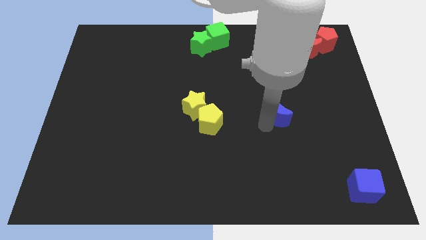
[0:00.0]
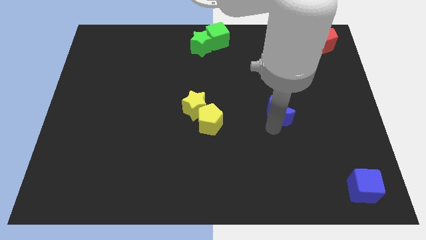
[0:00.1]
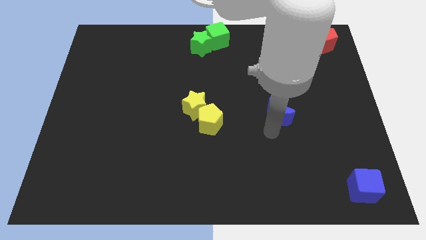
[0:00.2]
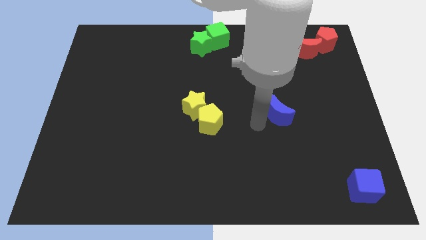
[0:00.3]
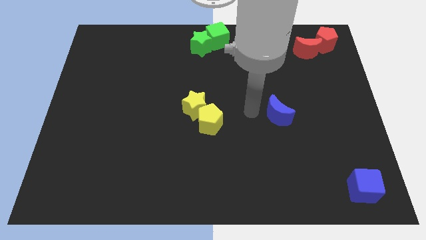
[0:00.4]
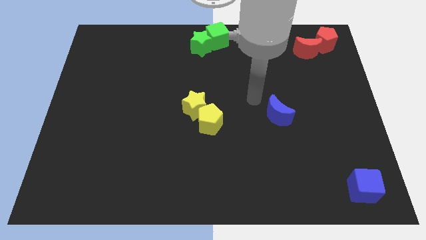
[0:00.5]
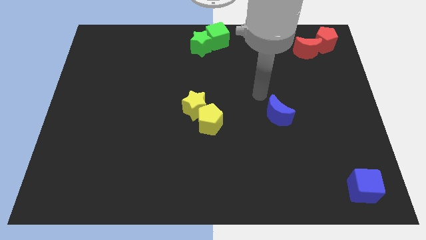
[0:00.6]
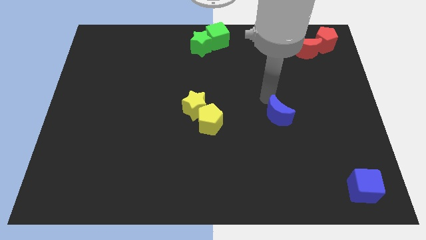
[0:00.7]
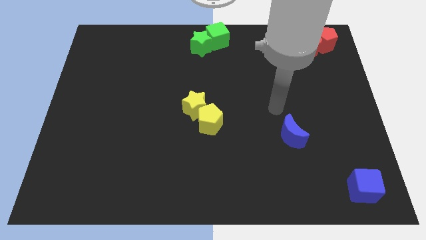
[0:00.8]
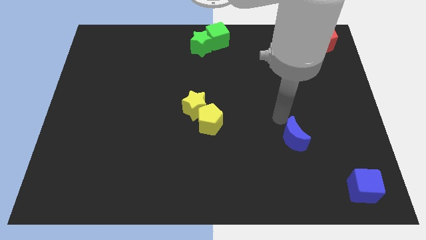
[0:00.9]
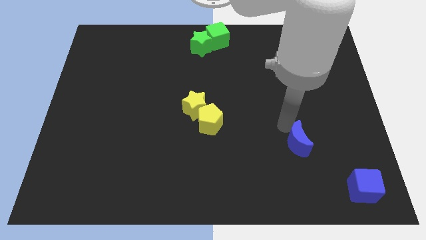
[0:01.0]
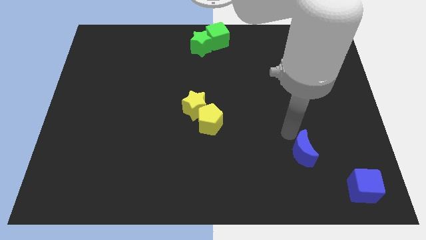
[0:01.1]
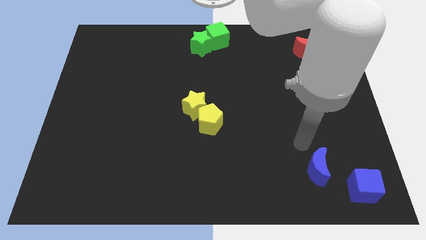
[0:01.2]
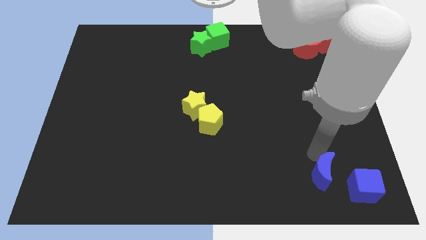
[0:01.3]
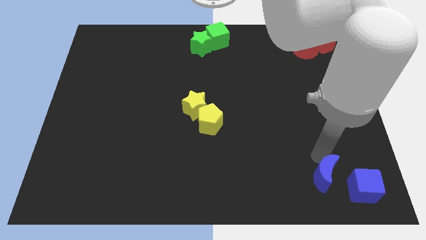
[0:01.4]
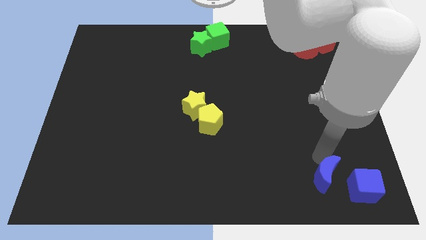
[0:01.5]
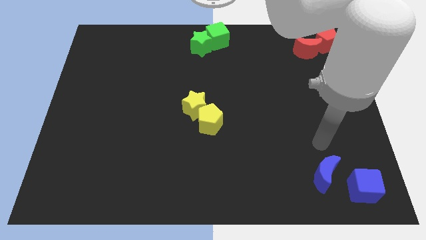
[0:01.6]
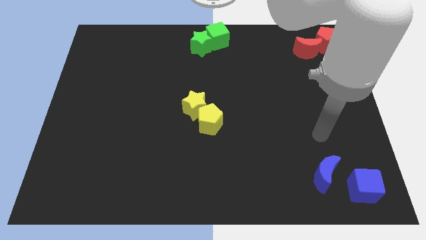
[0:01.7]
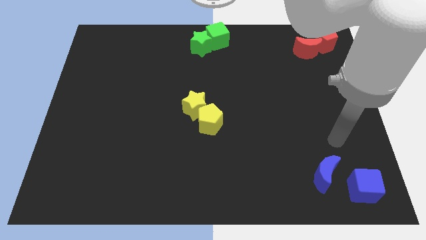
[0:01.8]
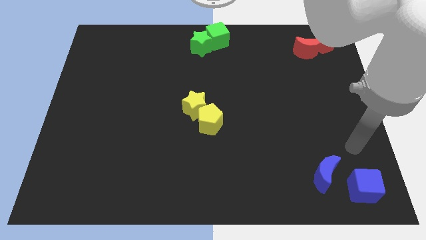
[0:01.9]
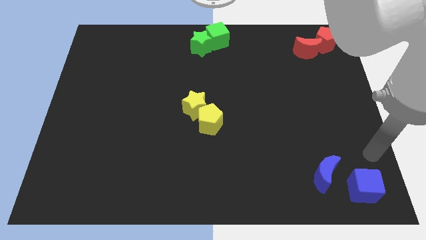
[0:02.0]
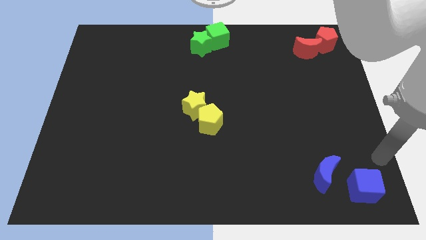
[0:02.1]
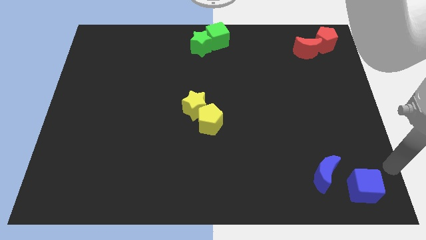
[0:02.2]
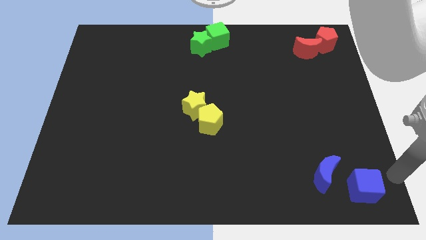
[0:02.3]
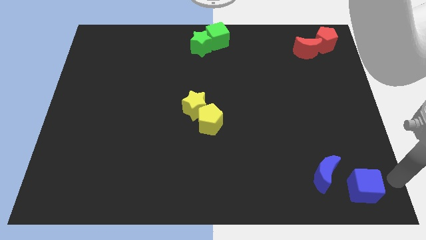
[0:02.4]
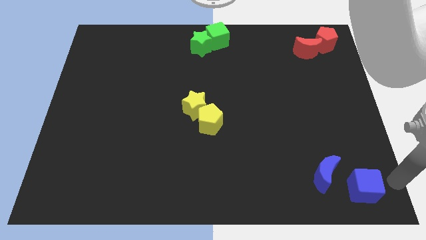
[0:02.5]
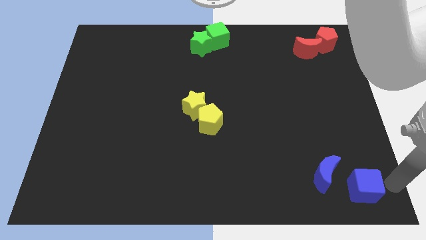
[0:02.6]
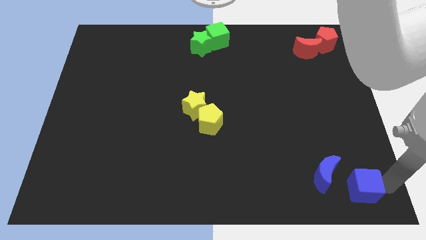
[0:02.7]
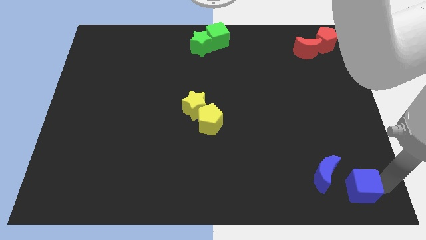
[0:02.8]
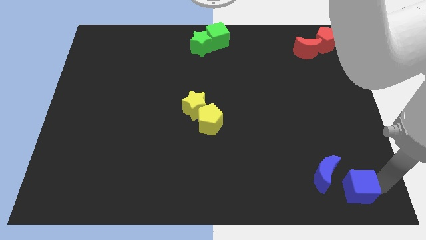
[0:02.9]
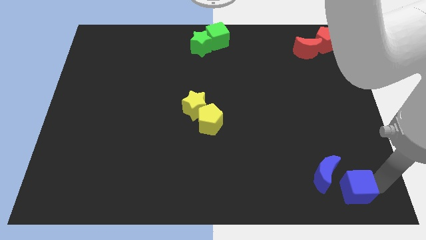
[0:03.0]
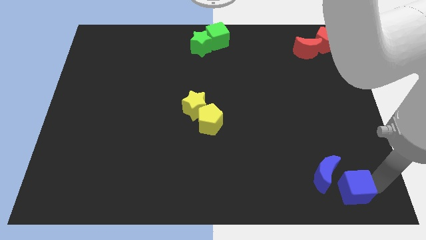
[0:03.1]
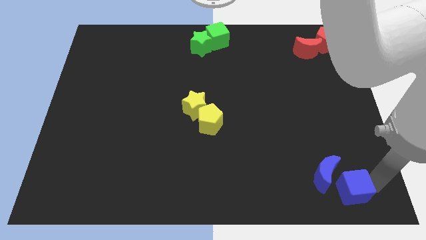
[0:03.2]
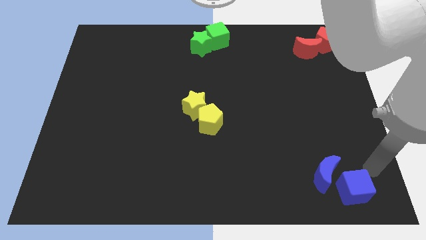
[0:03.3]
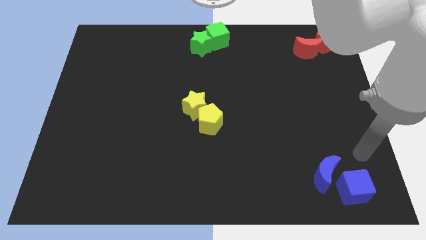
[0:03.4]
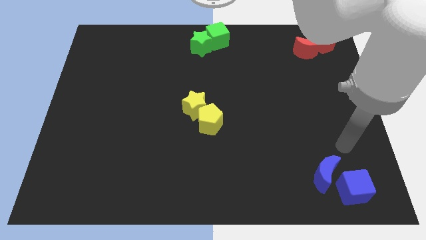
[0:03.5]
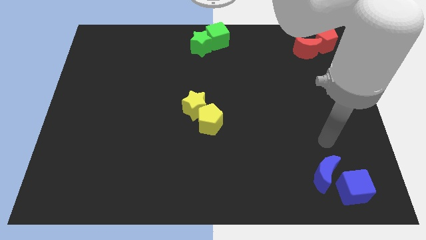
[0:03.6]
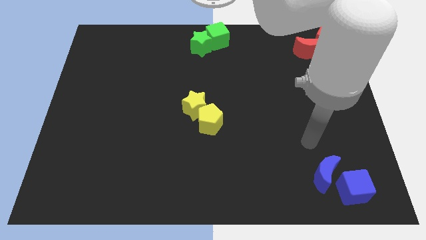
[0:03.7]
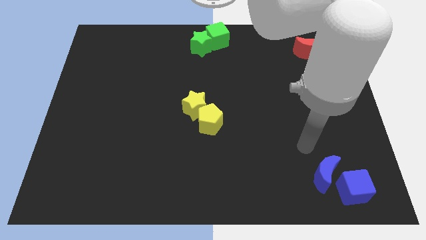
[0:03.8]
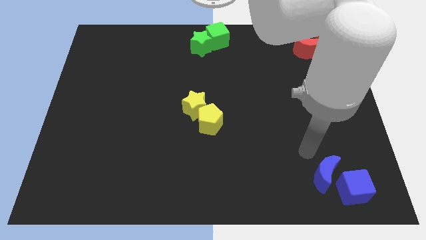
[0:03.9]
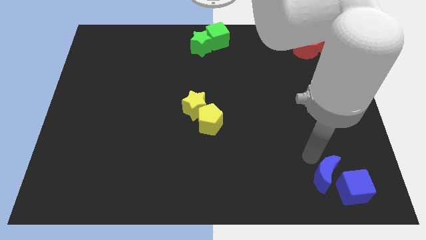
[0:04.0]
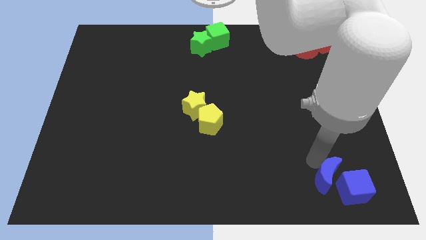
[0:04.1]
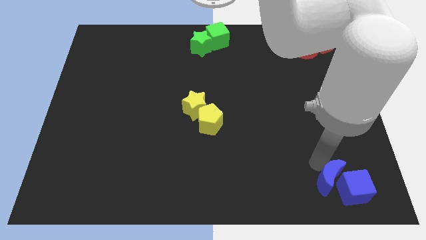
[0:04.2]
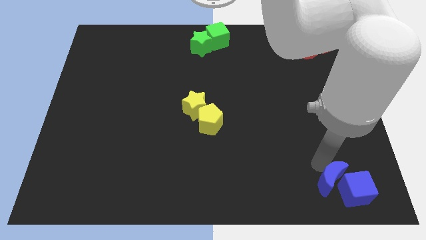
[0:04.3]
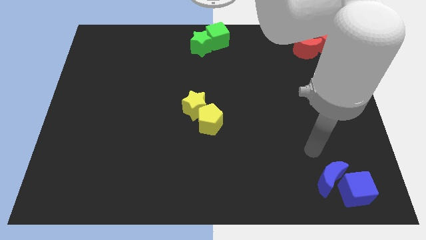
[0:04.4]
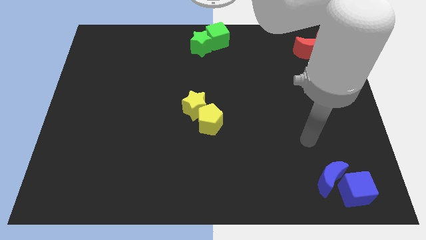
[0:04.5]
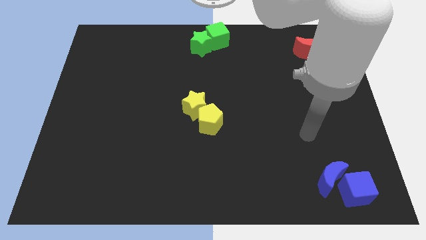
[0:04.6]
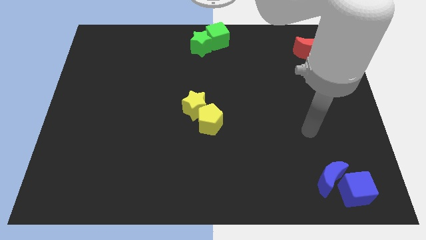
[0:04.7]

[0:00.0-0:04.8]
push the blue crescent into the blue cube

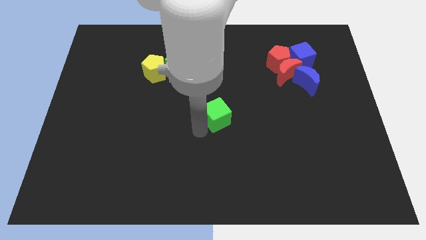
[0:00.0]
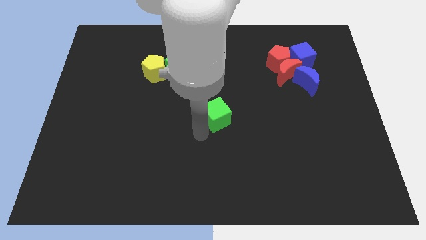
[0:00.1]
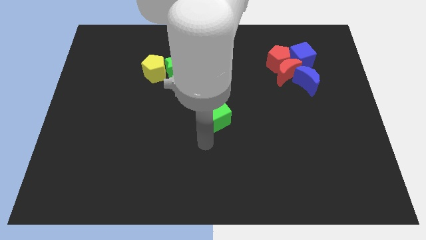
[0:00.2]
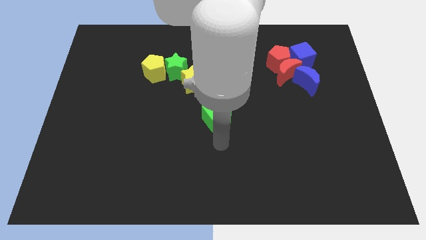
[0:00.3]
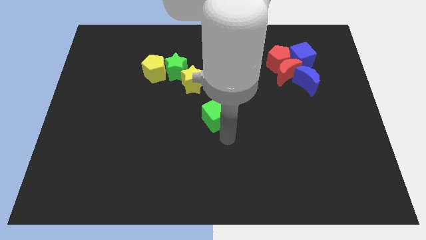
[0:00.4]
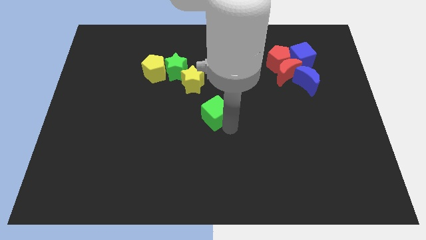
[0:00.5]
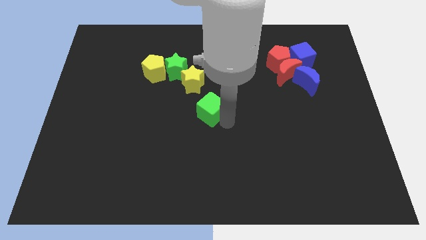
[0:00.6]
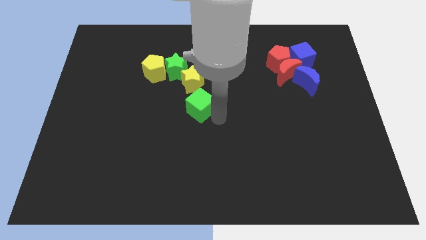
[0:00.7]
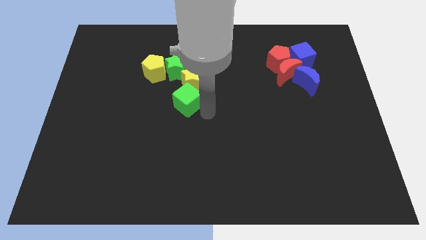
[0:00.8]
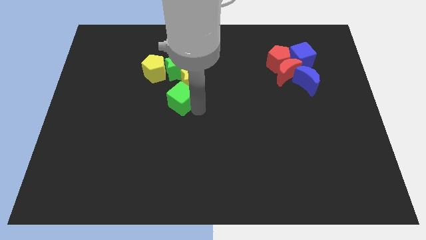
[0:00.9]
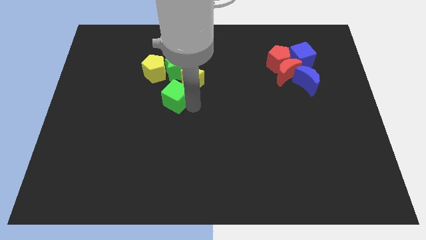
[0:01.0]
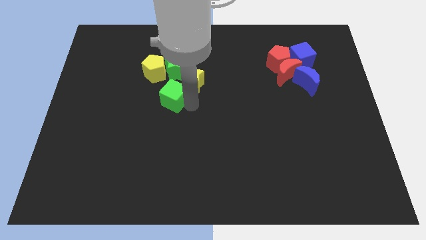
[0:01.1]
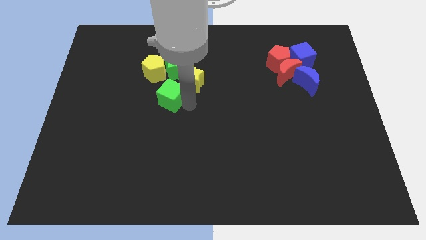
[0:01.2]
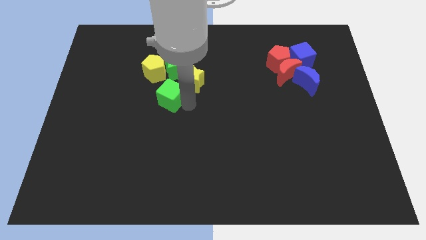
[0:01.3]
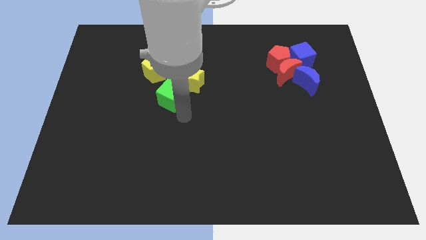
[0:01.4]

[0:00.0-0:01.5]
push the green cube slightly to the top left

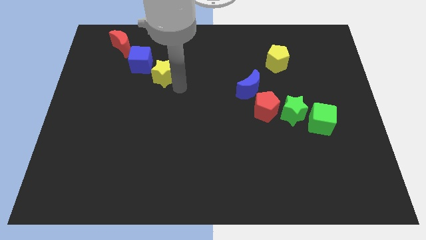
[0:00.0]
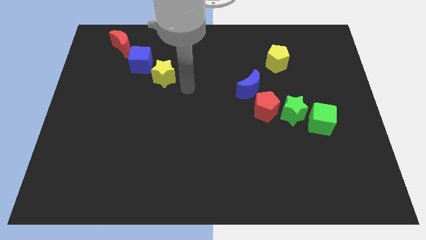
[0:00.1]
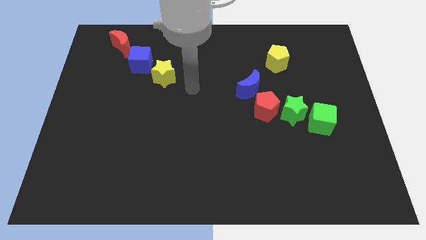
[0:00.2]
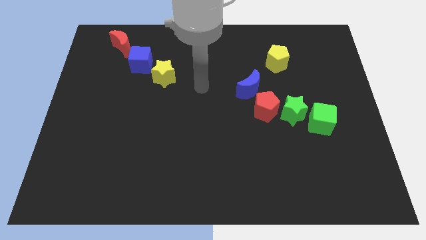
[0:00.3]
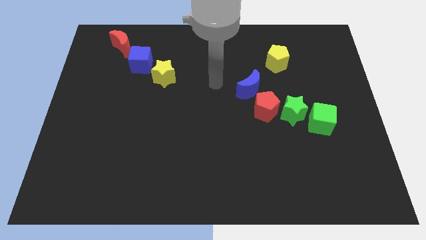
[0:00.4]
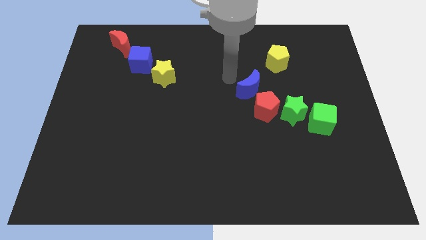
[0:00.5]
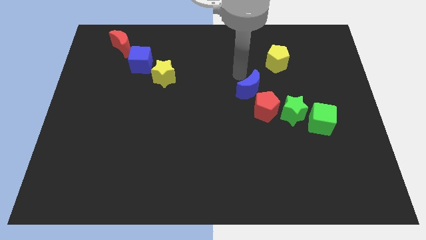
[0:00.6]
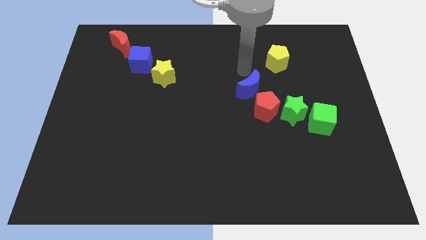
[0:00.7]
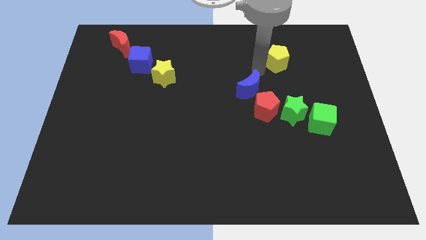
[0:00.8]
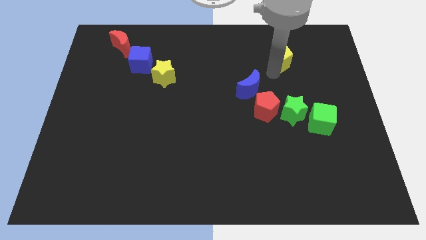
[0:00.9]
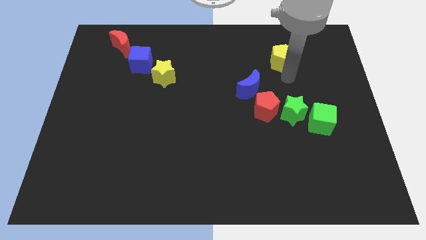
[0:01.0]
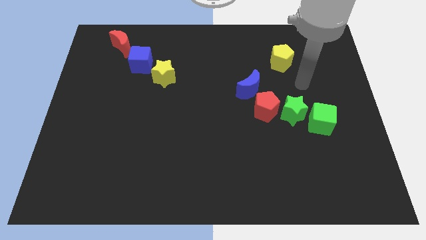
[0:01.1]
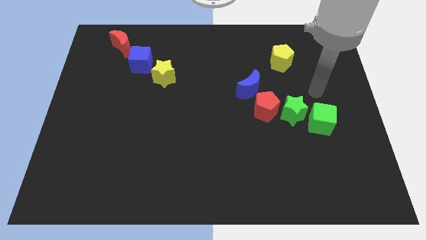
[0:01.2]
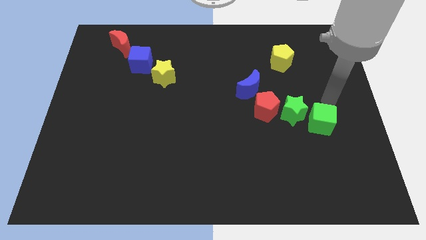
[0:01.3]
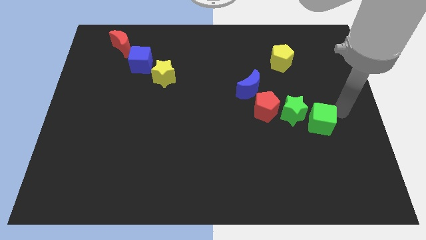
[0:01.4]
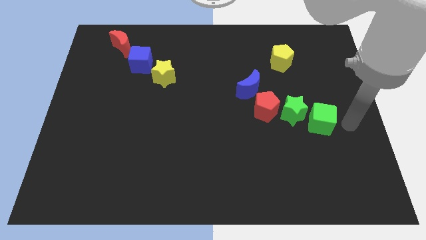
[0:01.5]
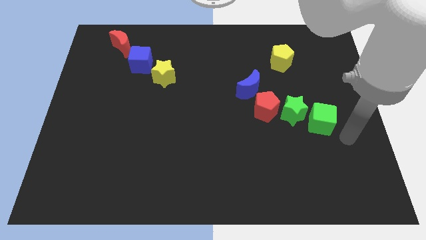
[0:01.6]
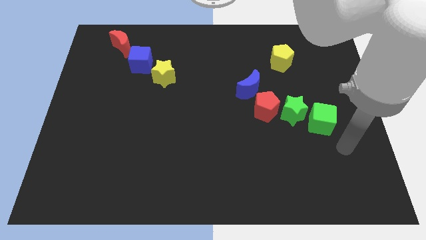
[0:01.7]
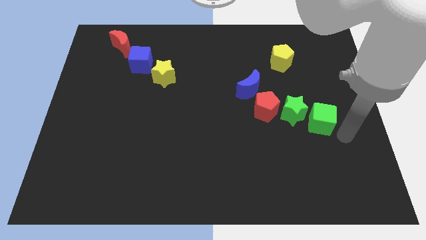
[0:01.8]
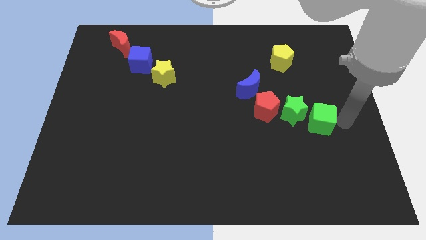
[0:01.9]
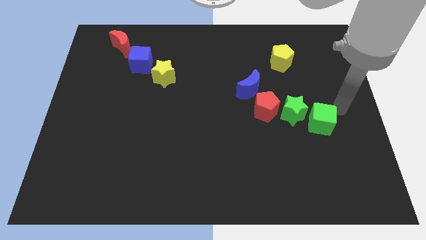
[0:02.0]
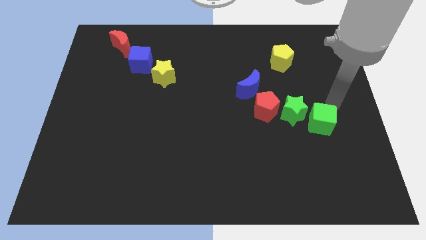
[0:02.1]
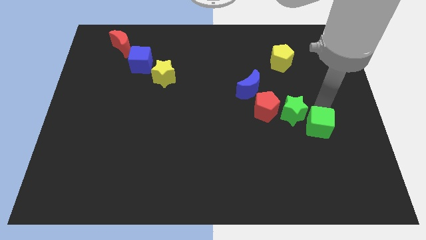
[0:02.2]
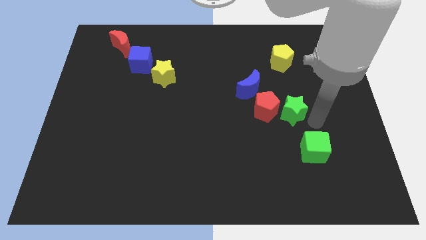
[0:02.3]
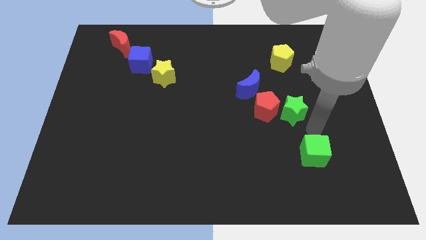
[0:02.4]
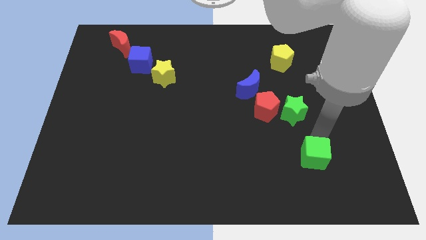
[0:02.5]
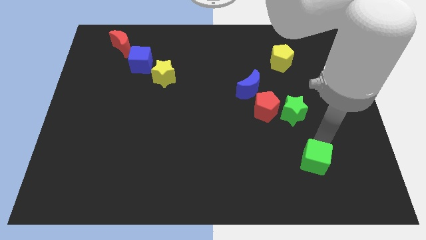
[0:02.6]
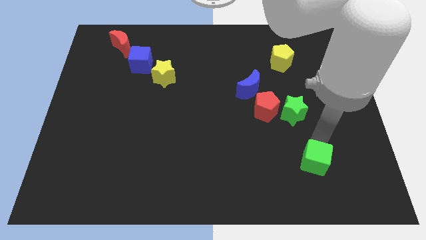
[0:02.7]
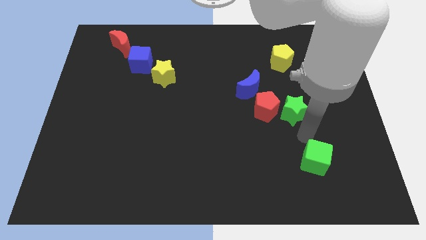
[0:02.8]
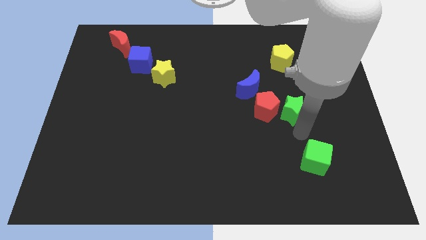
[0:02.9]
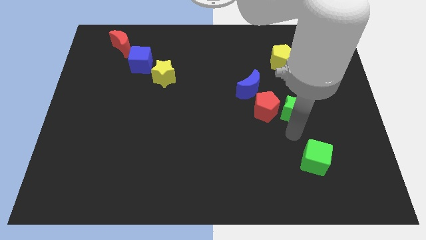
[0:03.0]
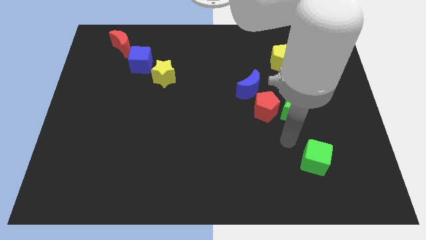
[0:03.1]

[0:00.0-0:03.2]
place the green cube below the green star
